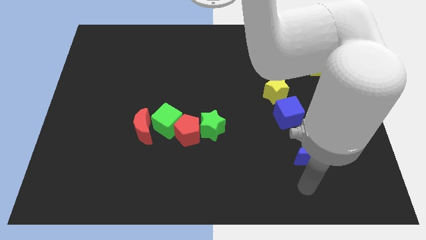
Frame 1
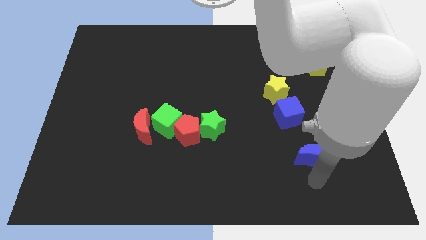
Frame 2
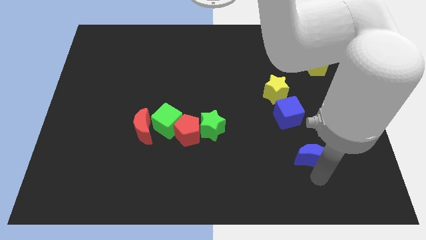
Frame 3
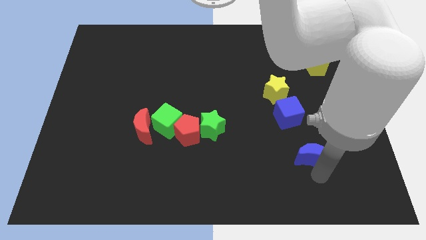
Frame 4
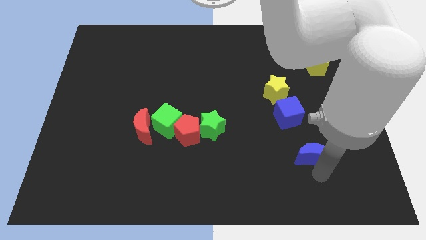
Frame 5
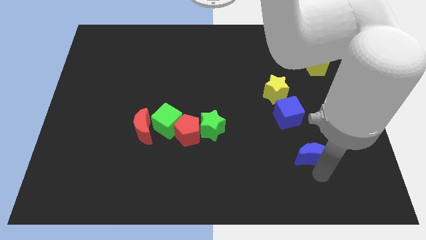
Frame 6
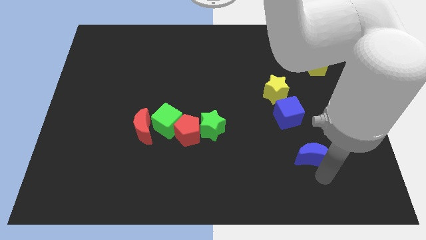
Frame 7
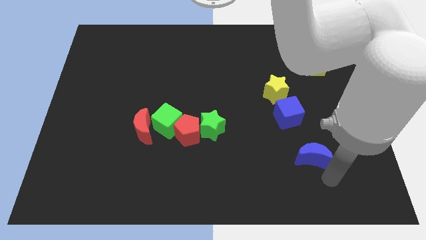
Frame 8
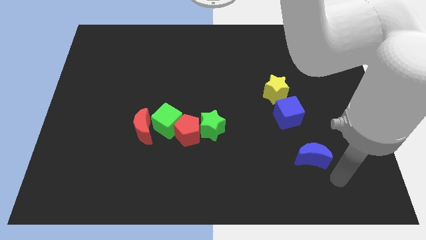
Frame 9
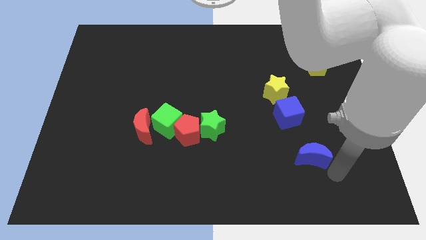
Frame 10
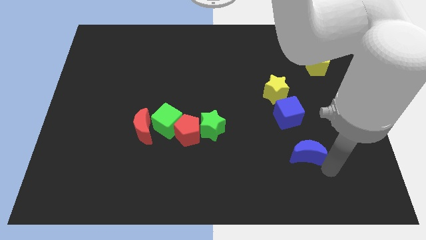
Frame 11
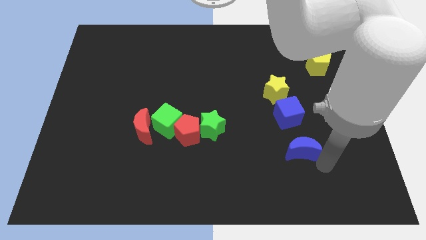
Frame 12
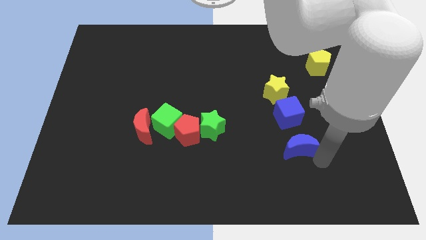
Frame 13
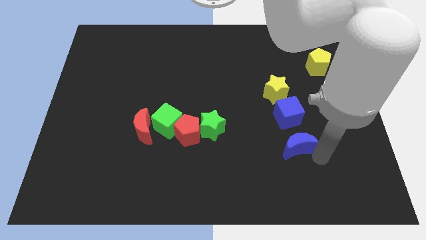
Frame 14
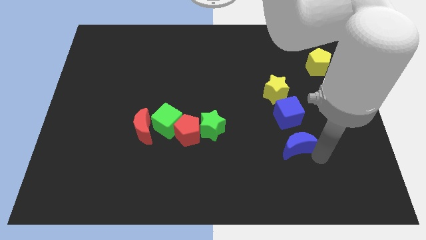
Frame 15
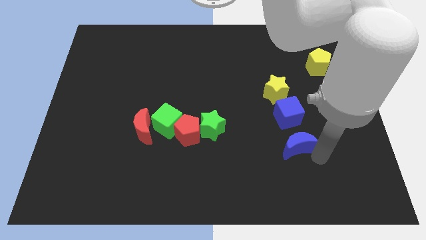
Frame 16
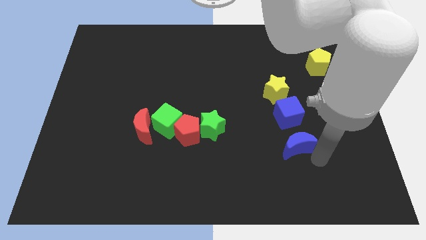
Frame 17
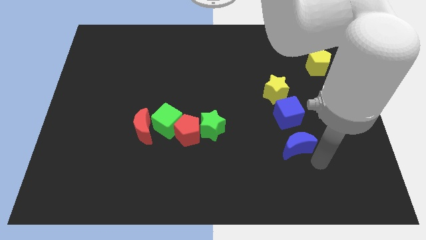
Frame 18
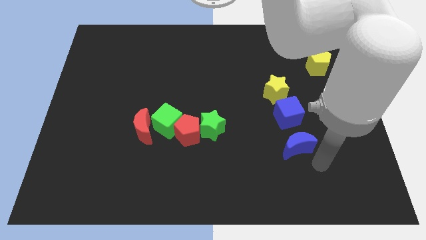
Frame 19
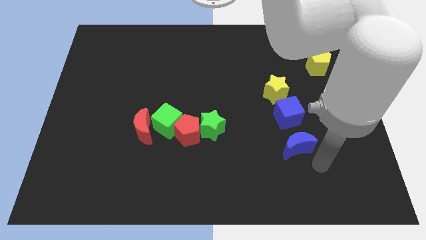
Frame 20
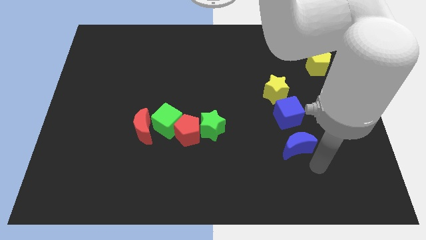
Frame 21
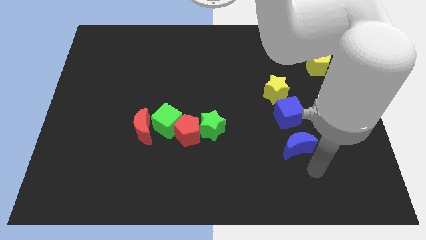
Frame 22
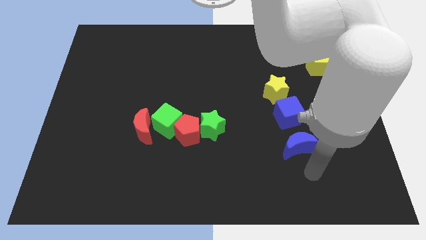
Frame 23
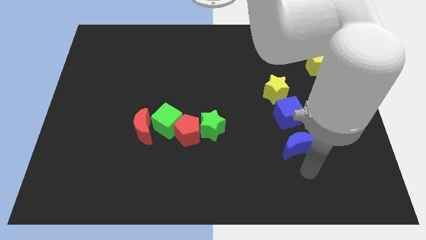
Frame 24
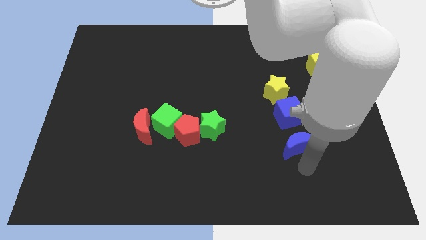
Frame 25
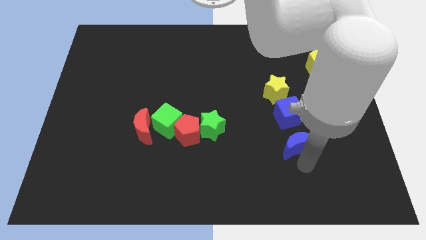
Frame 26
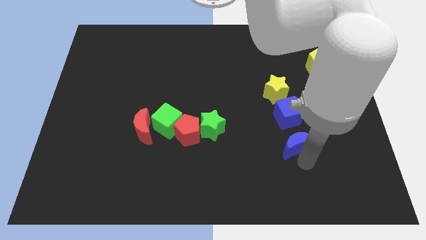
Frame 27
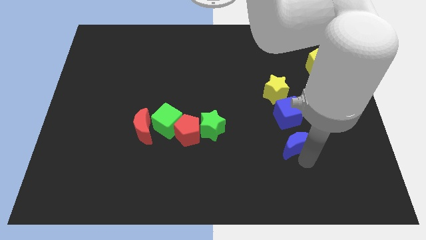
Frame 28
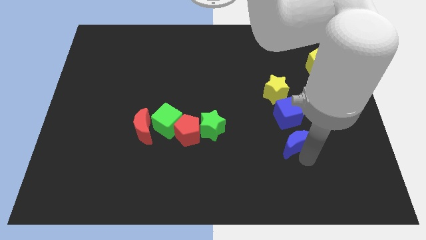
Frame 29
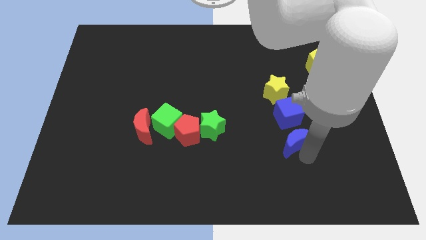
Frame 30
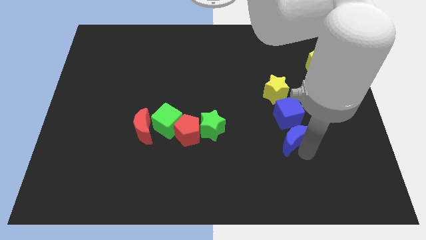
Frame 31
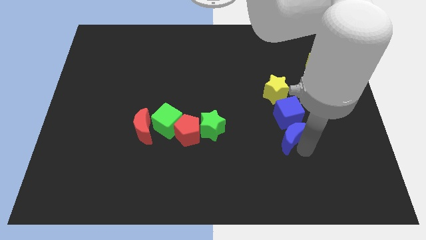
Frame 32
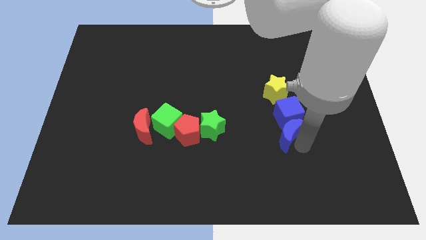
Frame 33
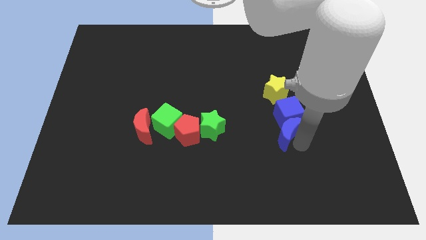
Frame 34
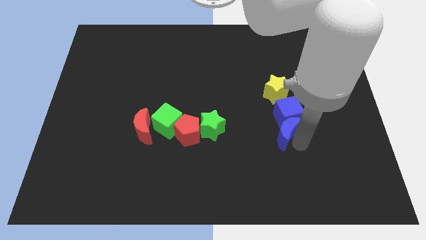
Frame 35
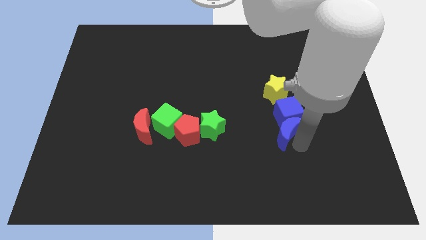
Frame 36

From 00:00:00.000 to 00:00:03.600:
make the blue crescent to the bottom of the blue cube

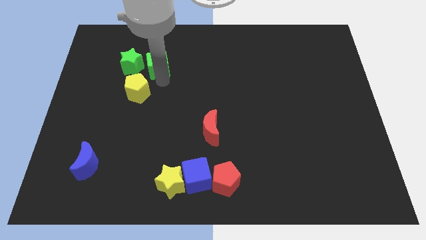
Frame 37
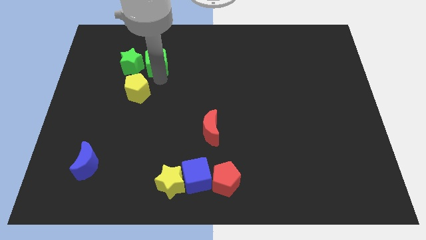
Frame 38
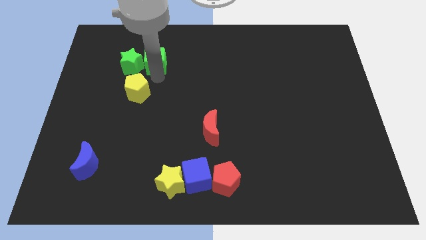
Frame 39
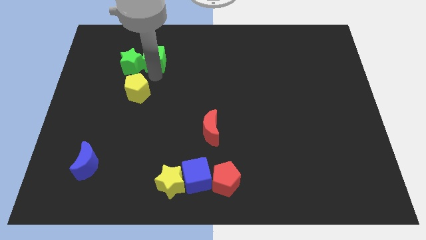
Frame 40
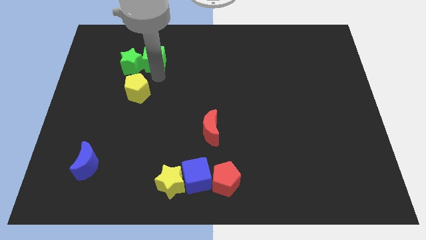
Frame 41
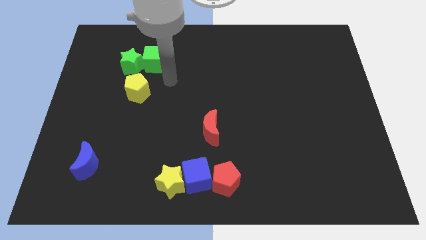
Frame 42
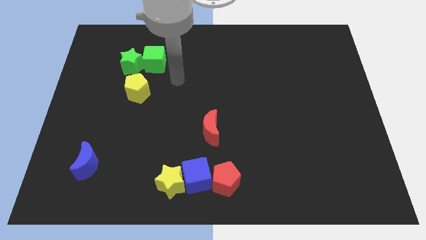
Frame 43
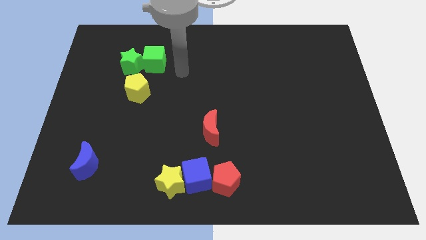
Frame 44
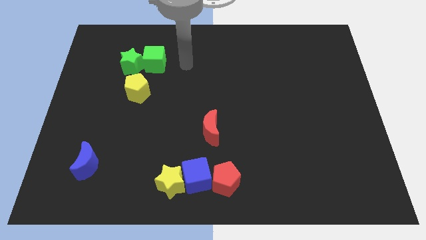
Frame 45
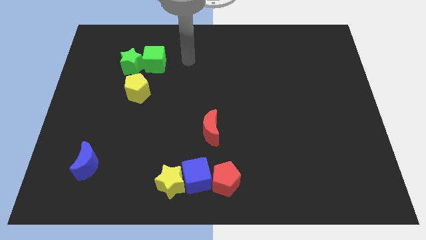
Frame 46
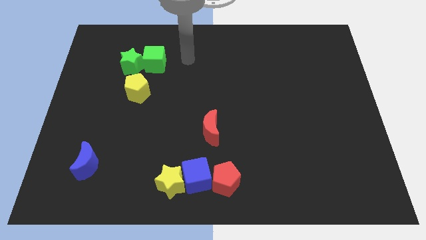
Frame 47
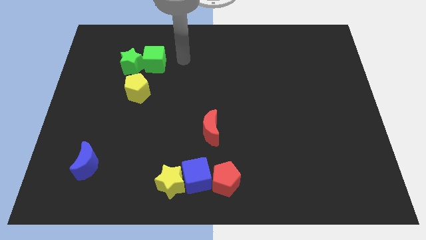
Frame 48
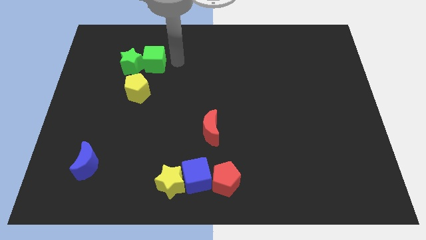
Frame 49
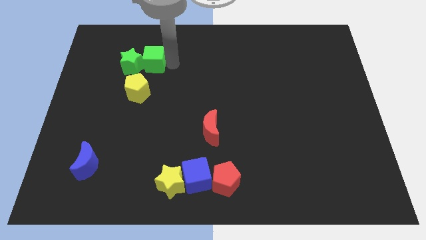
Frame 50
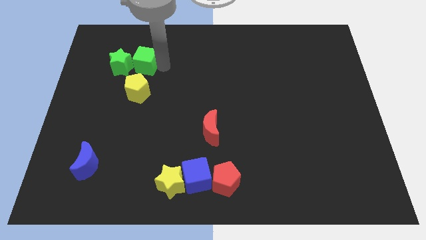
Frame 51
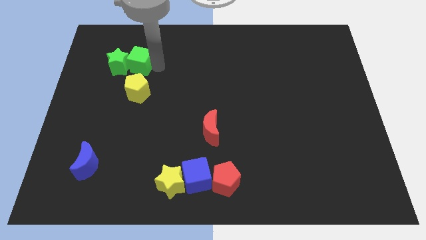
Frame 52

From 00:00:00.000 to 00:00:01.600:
push the green cube into green star

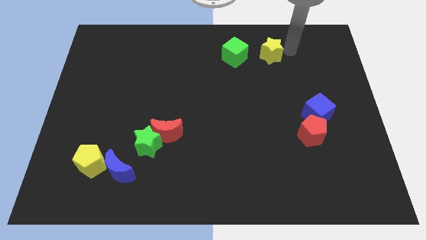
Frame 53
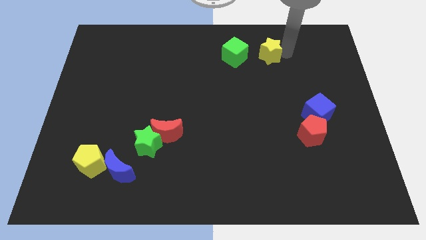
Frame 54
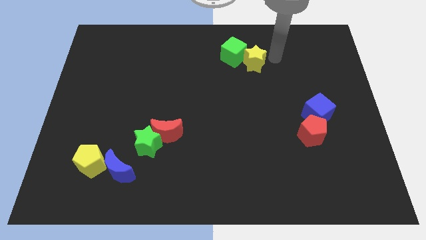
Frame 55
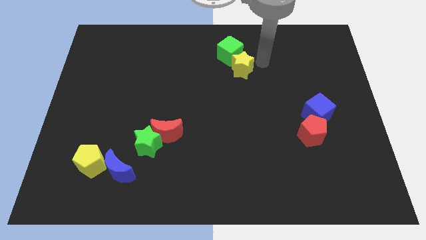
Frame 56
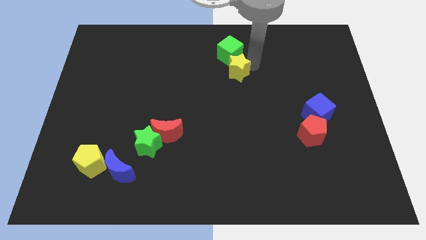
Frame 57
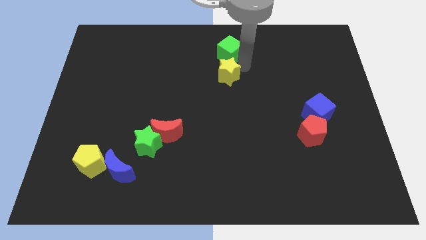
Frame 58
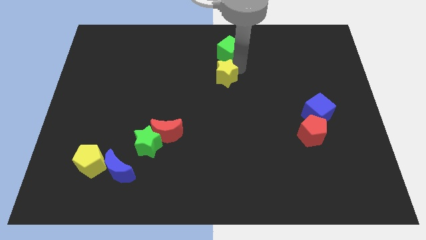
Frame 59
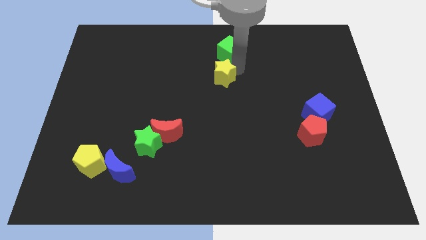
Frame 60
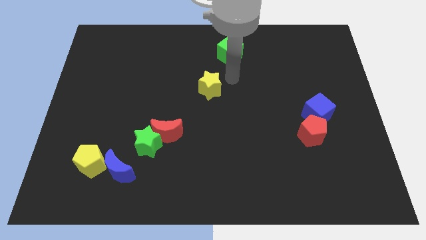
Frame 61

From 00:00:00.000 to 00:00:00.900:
push the yellow star to the bottom of the green cube

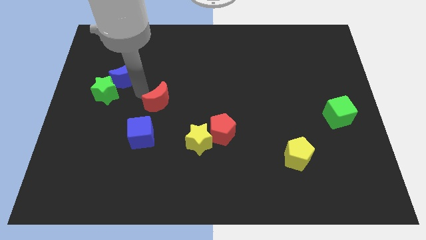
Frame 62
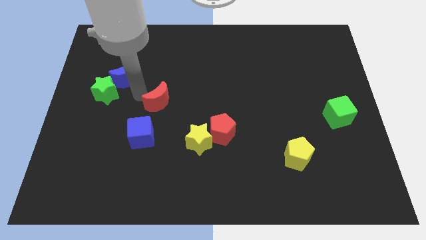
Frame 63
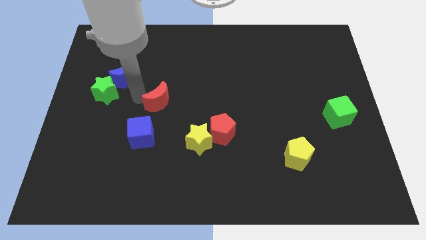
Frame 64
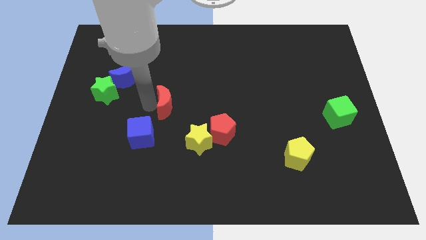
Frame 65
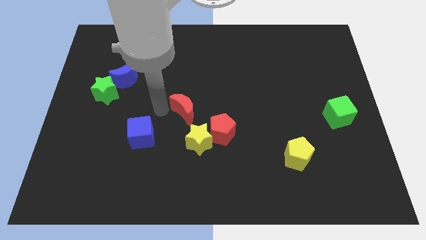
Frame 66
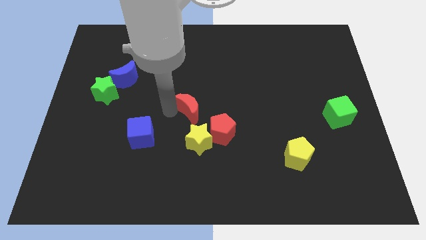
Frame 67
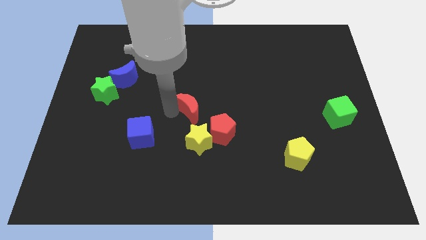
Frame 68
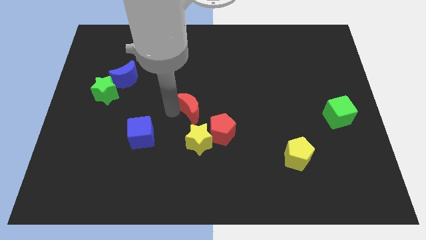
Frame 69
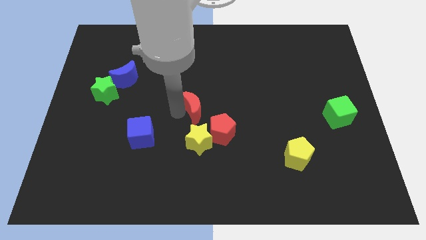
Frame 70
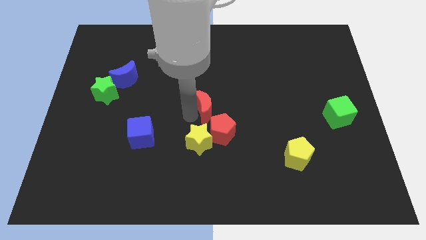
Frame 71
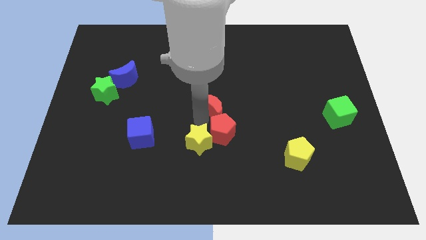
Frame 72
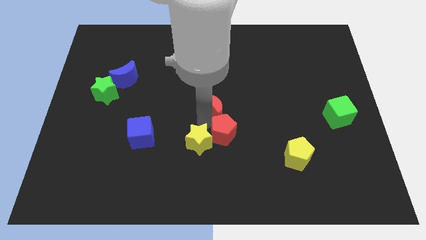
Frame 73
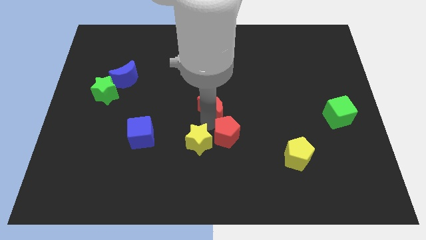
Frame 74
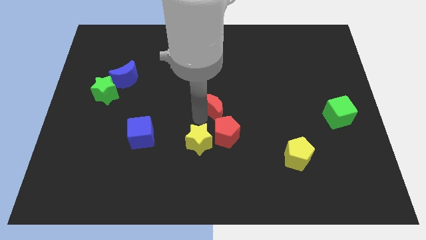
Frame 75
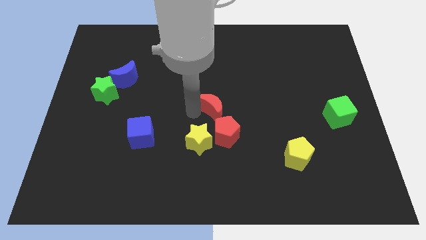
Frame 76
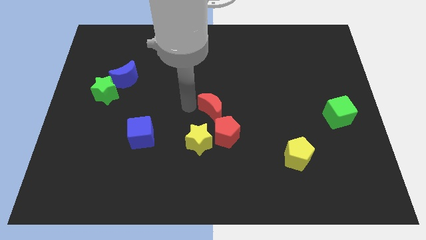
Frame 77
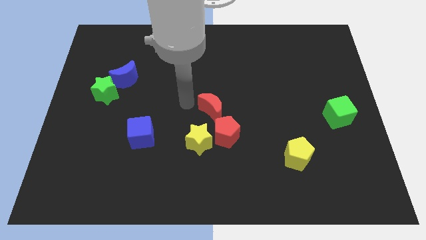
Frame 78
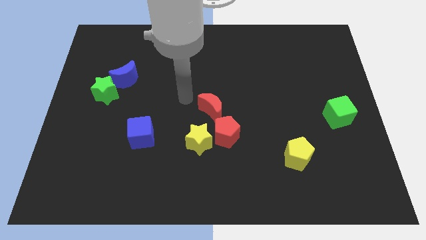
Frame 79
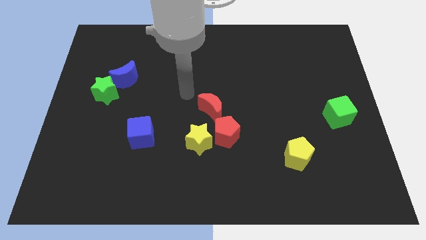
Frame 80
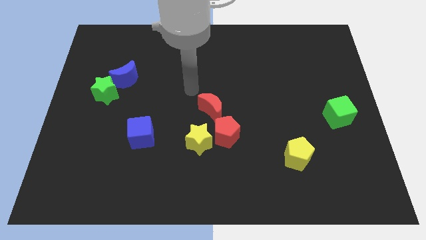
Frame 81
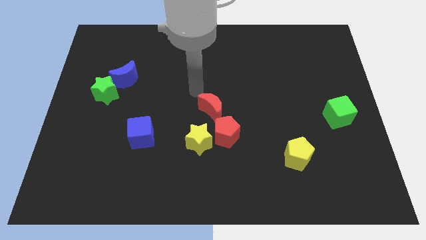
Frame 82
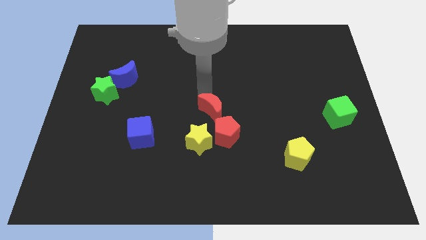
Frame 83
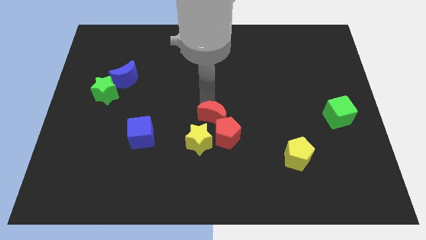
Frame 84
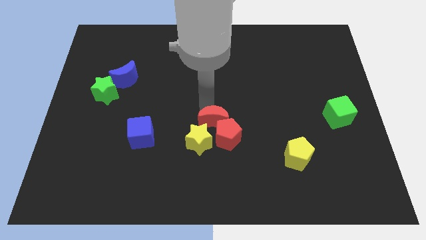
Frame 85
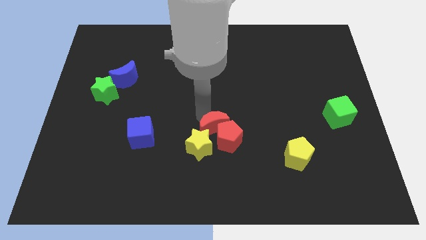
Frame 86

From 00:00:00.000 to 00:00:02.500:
push the red moon into the red pentagon

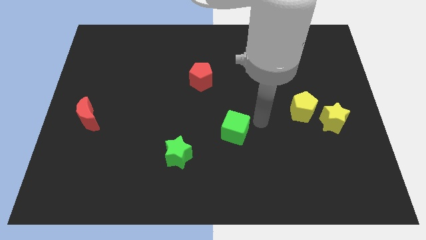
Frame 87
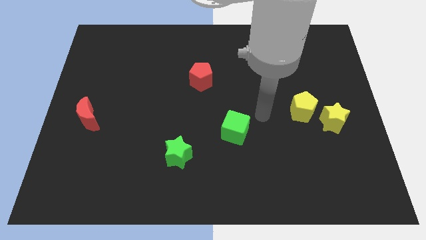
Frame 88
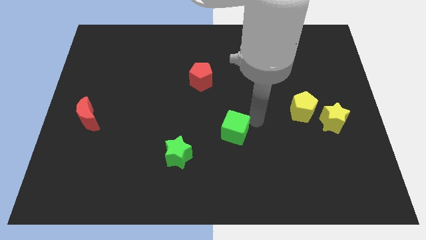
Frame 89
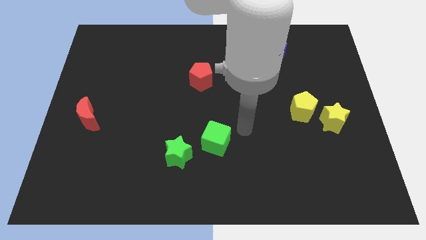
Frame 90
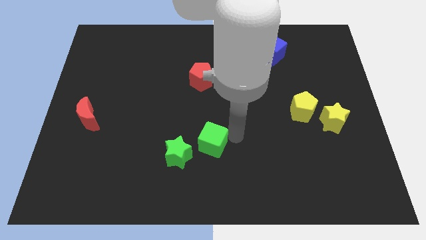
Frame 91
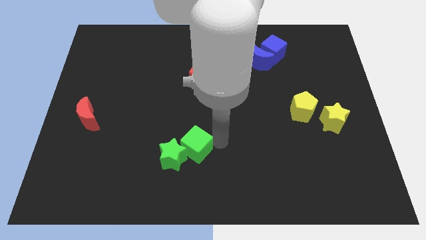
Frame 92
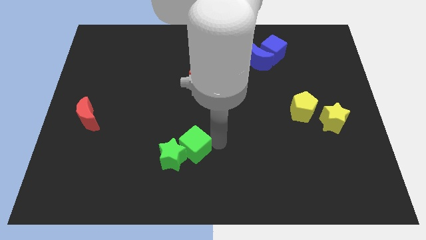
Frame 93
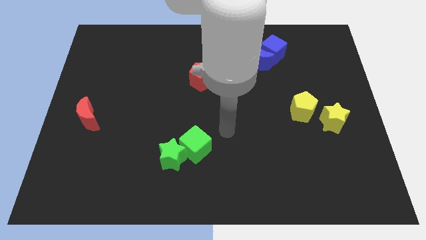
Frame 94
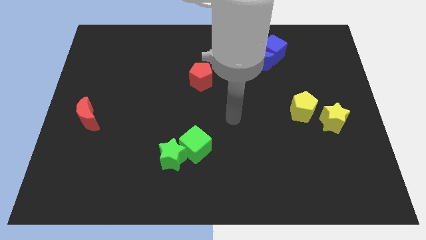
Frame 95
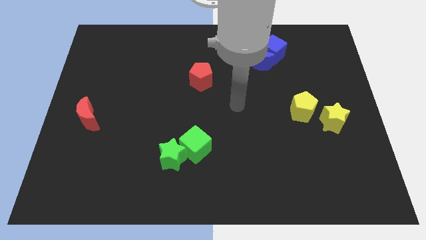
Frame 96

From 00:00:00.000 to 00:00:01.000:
push the green star with the help of the green cube towards the bottom left corner of teh board
